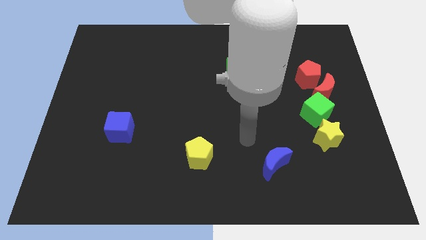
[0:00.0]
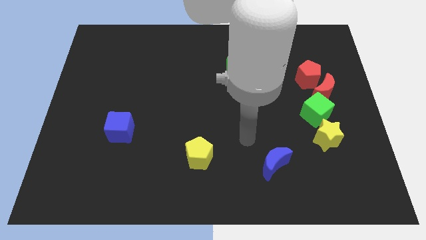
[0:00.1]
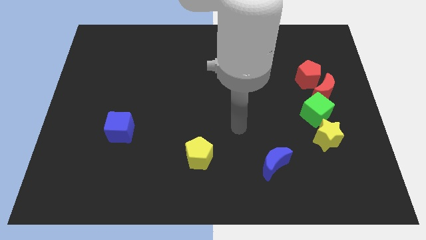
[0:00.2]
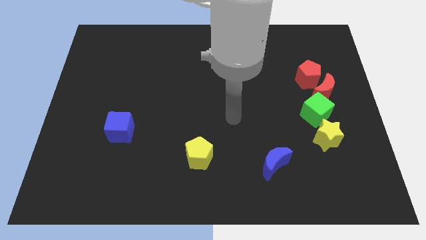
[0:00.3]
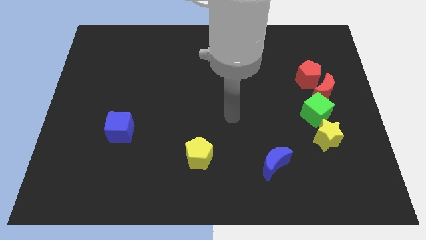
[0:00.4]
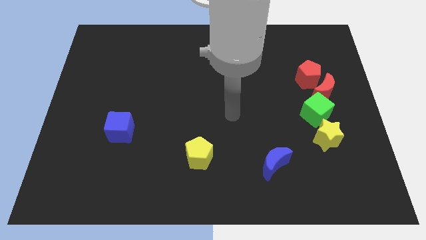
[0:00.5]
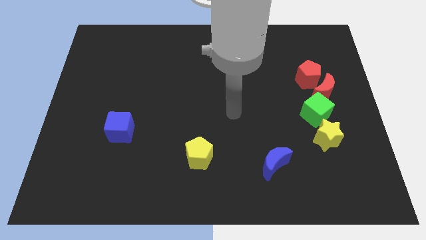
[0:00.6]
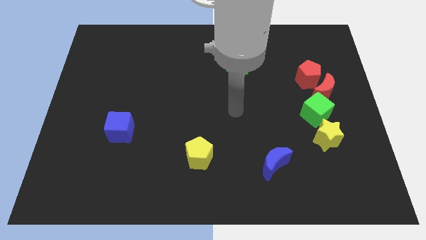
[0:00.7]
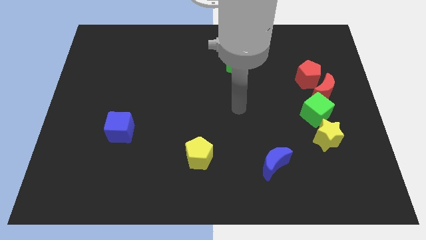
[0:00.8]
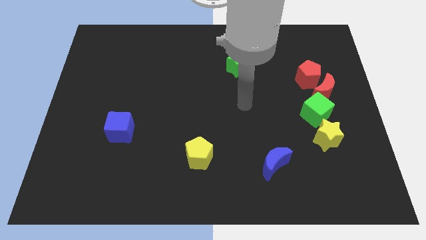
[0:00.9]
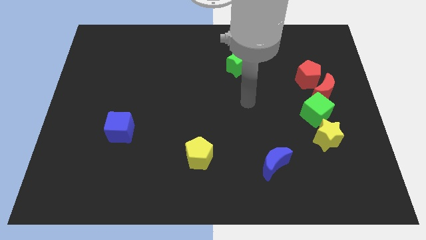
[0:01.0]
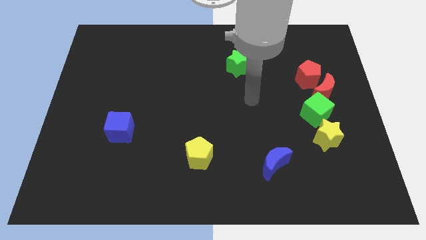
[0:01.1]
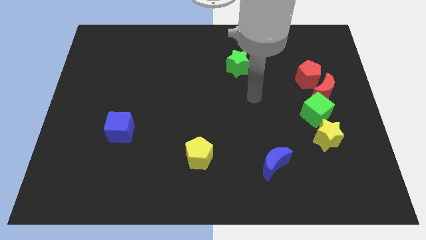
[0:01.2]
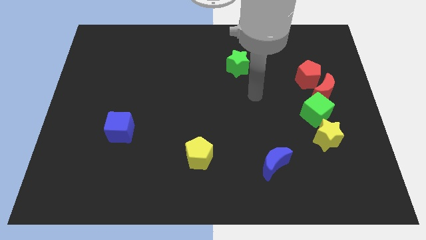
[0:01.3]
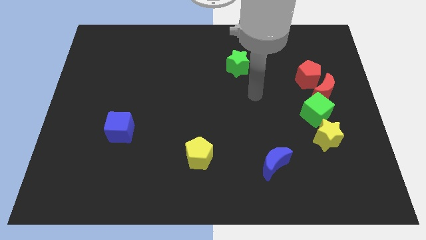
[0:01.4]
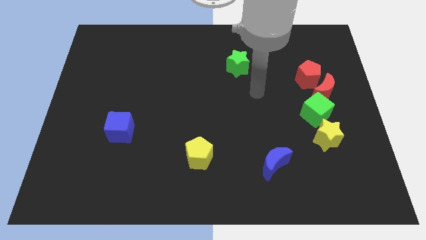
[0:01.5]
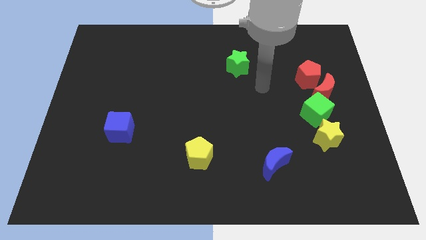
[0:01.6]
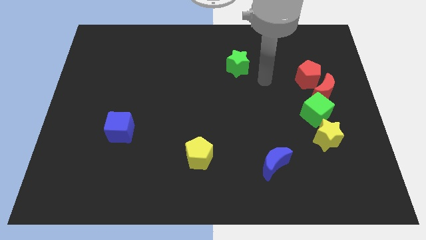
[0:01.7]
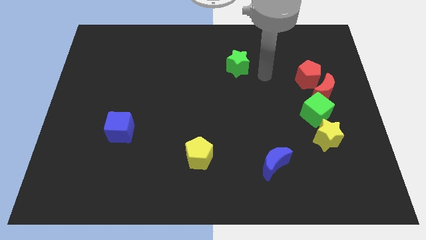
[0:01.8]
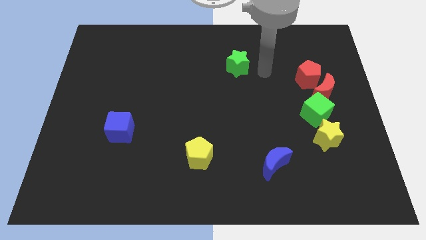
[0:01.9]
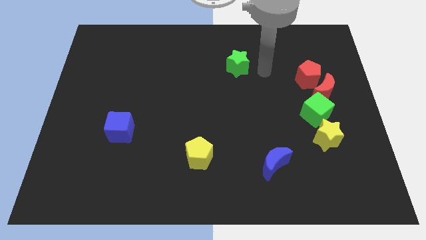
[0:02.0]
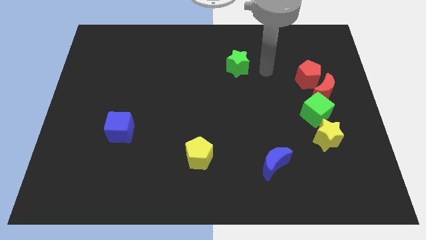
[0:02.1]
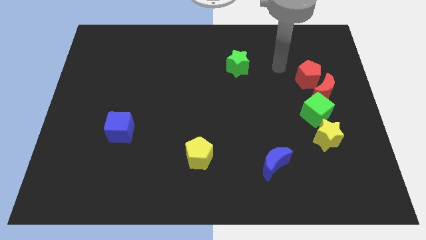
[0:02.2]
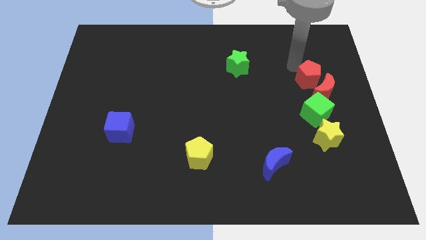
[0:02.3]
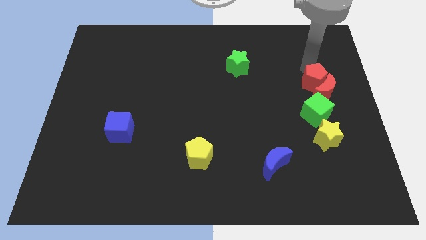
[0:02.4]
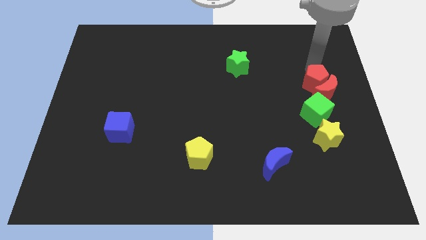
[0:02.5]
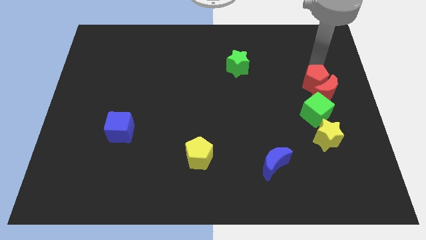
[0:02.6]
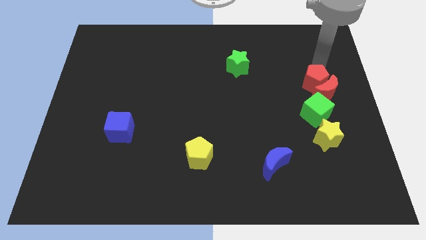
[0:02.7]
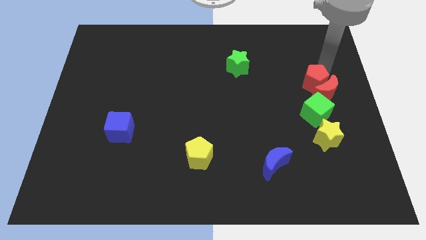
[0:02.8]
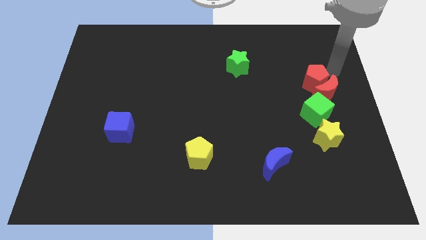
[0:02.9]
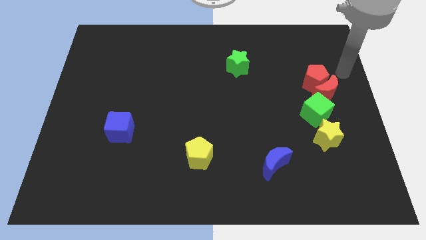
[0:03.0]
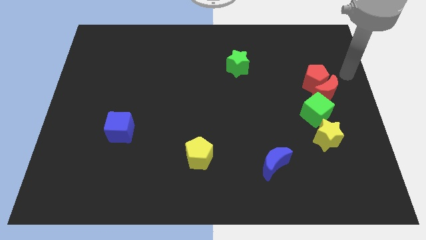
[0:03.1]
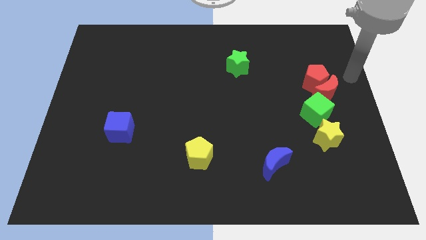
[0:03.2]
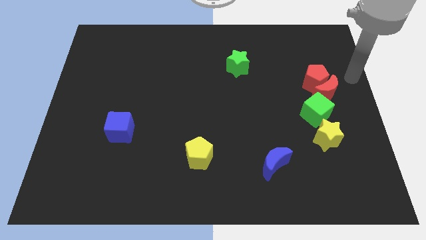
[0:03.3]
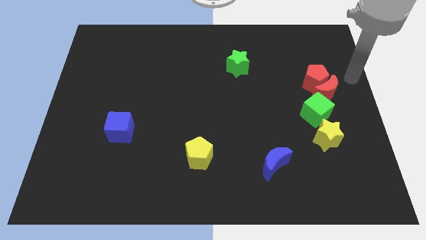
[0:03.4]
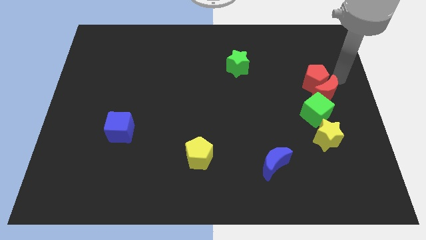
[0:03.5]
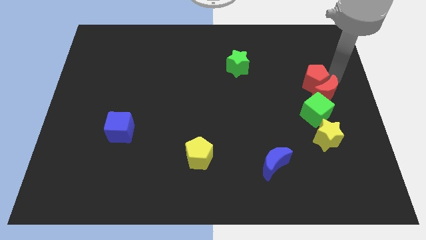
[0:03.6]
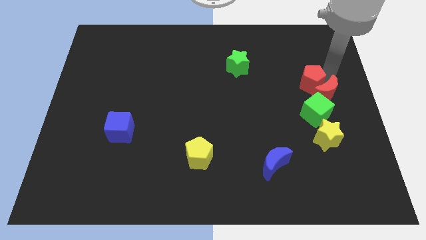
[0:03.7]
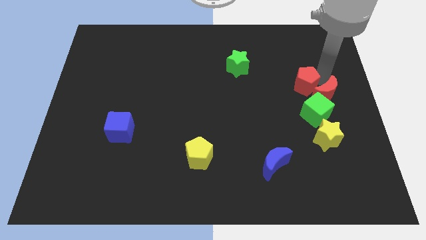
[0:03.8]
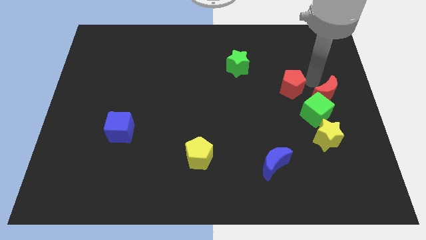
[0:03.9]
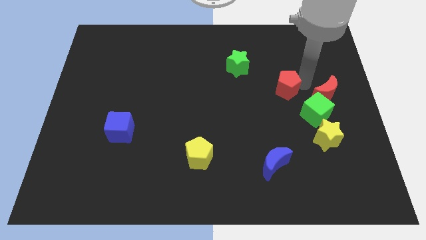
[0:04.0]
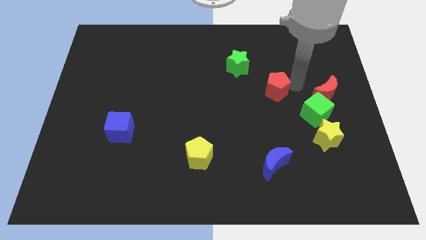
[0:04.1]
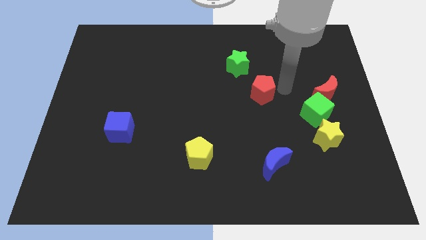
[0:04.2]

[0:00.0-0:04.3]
separate the red pentagon from the red crescent

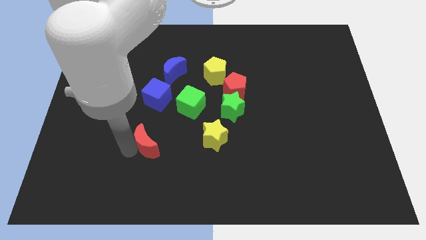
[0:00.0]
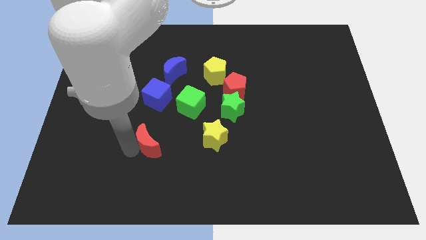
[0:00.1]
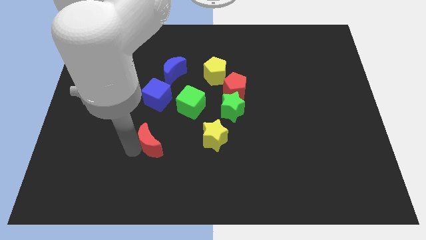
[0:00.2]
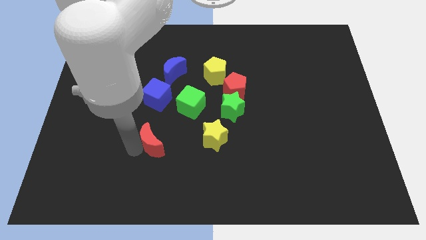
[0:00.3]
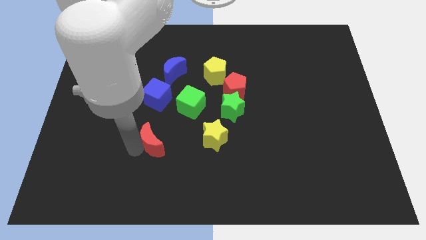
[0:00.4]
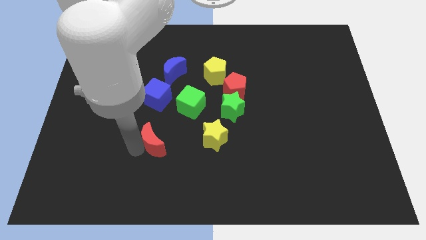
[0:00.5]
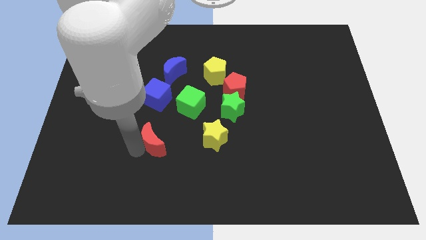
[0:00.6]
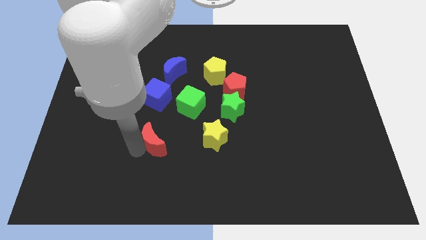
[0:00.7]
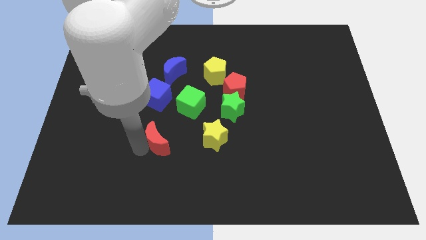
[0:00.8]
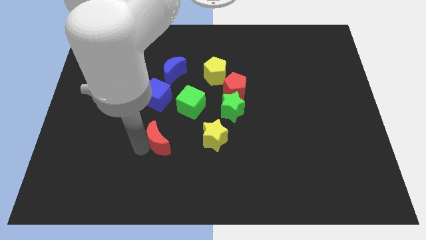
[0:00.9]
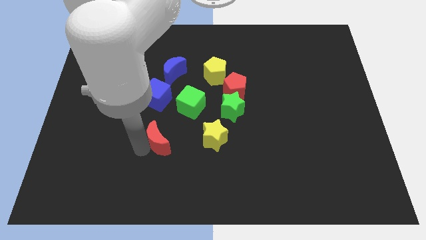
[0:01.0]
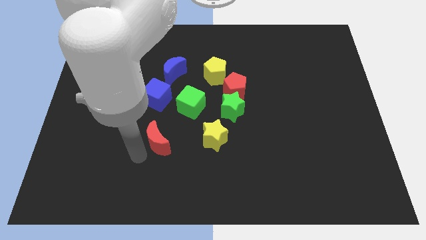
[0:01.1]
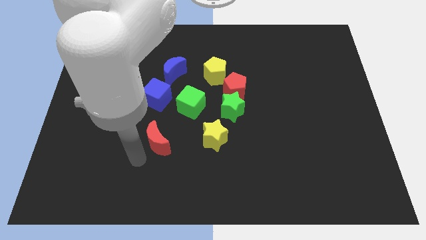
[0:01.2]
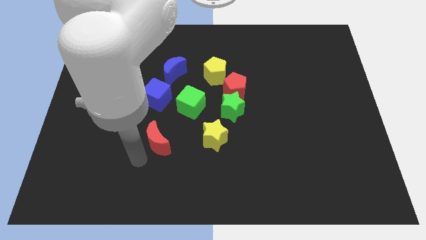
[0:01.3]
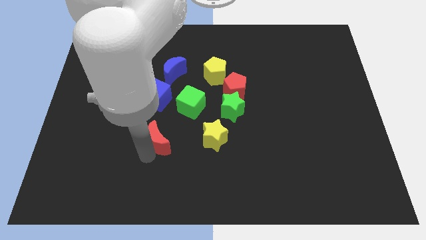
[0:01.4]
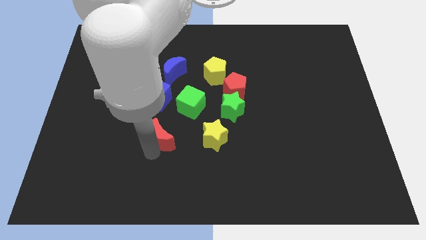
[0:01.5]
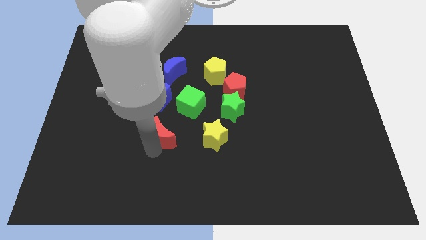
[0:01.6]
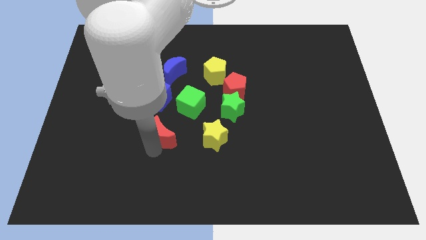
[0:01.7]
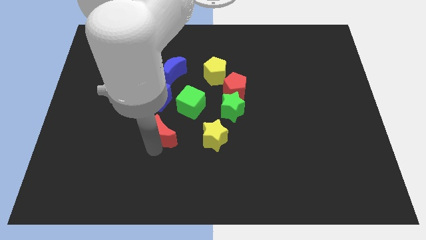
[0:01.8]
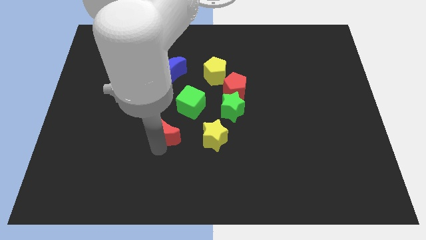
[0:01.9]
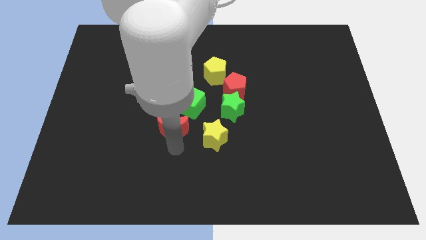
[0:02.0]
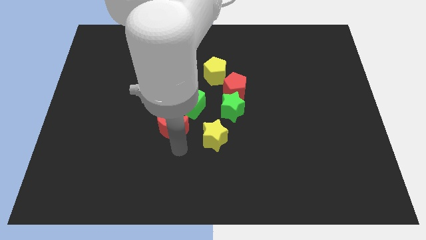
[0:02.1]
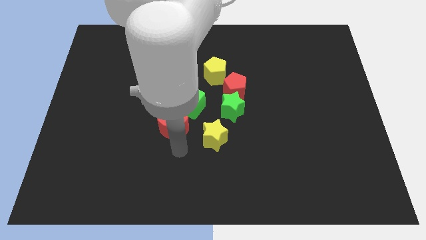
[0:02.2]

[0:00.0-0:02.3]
push red crescent slight towards up

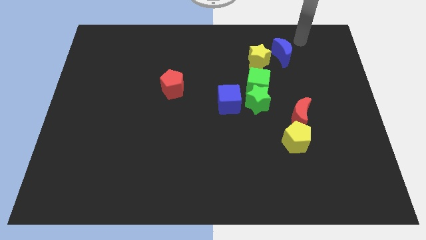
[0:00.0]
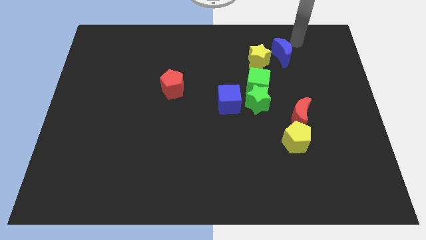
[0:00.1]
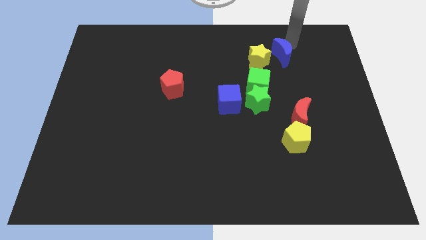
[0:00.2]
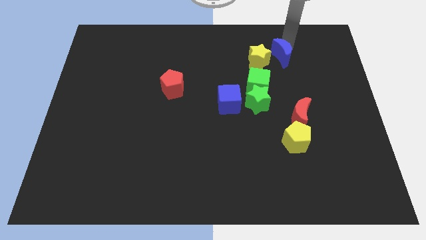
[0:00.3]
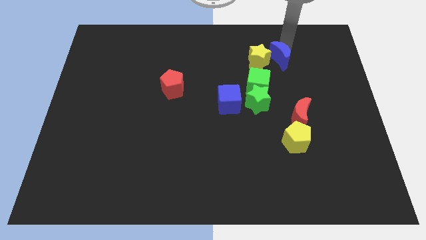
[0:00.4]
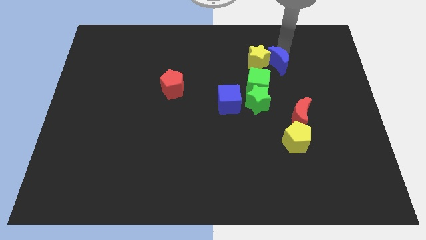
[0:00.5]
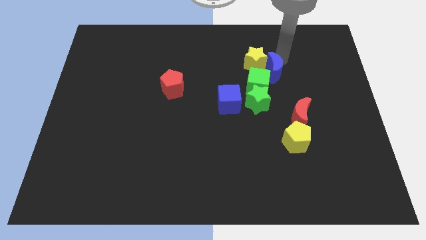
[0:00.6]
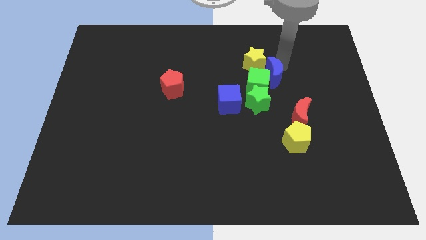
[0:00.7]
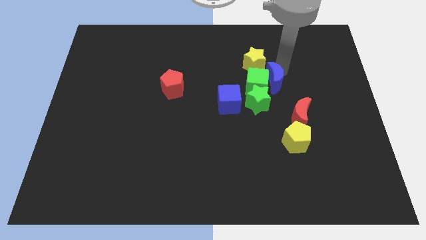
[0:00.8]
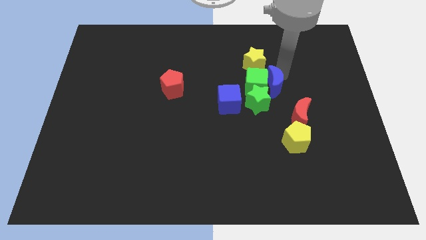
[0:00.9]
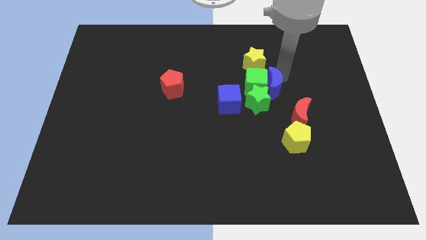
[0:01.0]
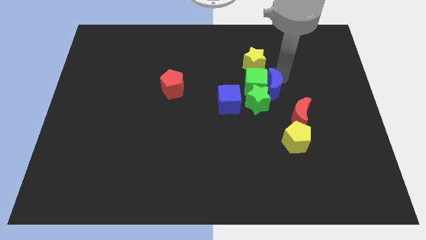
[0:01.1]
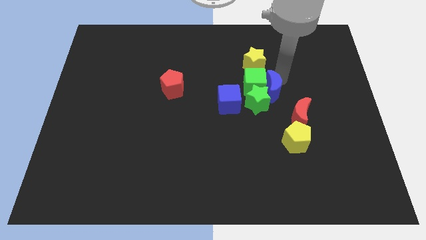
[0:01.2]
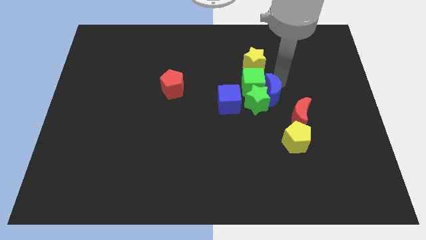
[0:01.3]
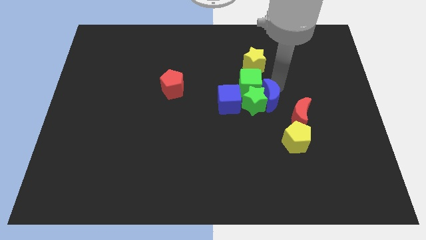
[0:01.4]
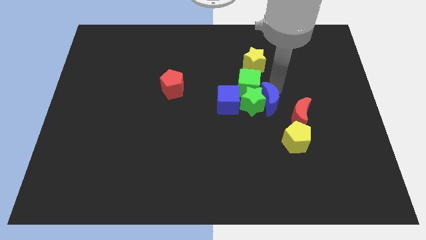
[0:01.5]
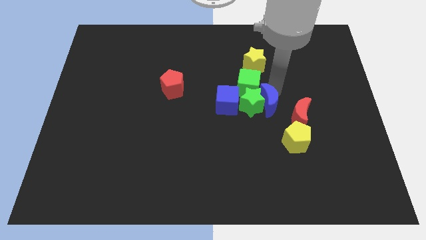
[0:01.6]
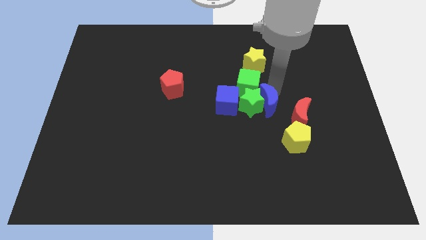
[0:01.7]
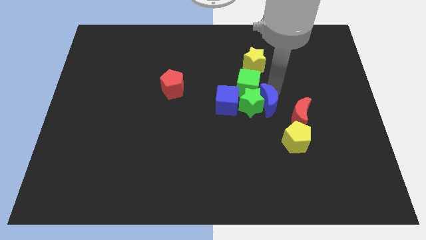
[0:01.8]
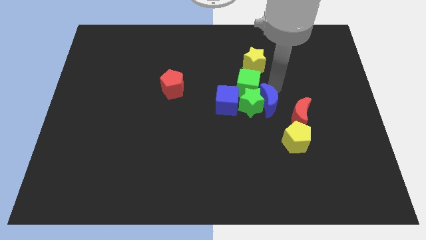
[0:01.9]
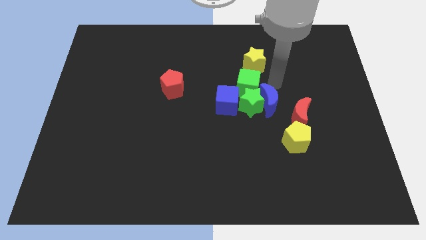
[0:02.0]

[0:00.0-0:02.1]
drag the blue moon on the right side of the green star

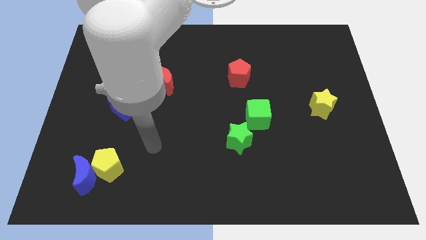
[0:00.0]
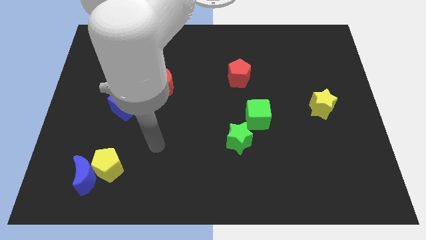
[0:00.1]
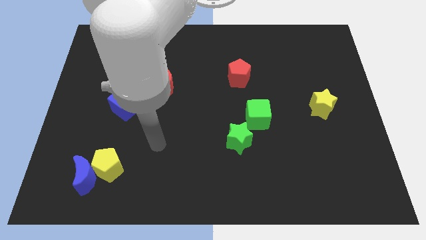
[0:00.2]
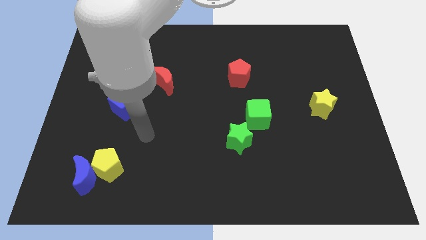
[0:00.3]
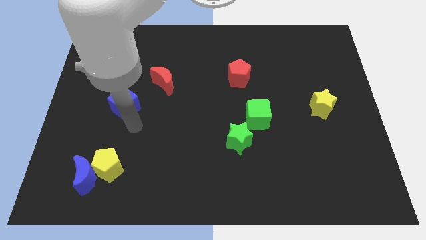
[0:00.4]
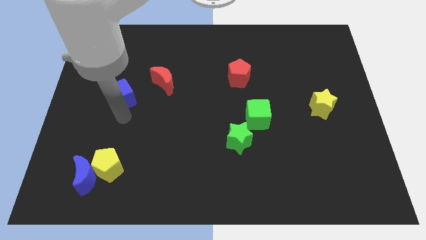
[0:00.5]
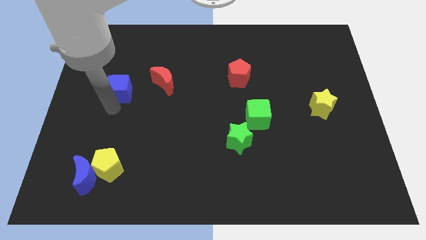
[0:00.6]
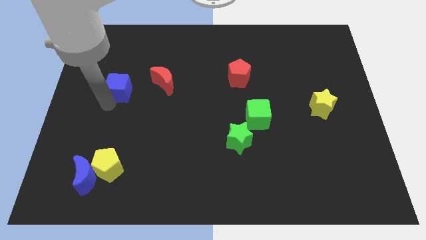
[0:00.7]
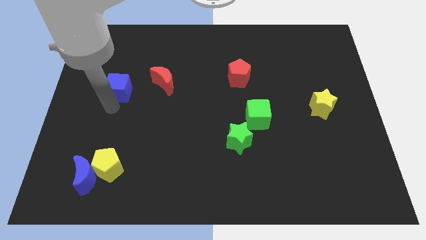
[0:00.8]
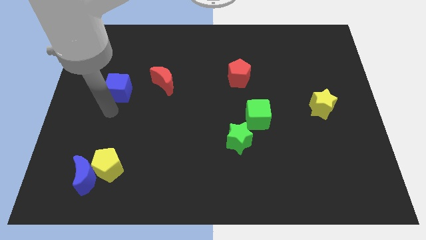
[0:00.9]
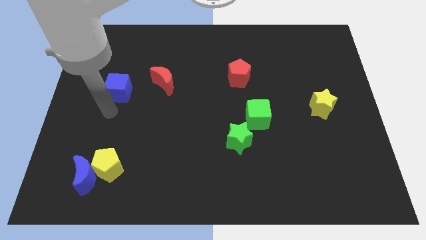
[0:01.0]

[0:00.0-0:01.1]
place blue cube to the left of red moon
